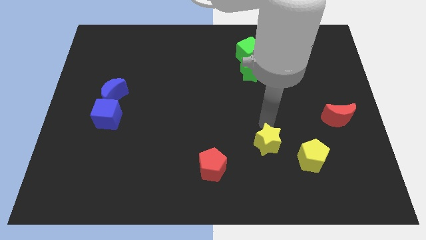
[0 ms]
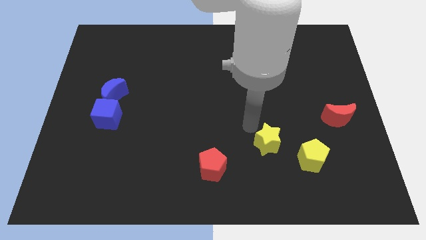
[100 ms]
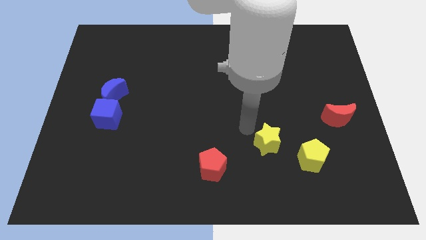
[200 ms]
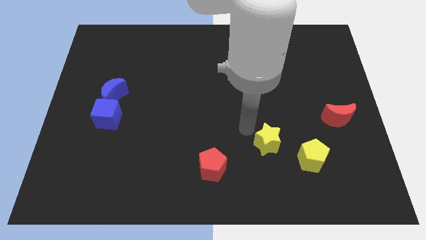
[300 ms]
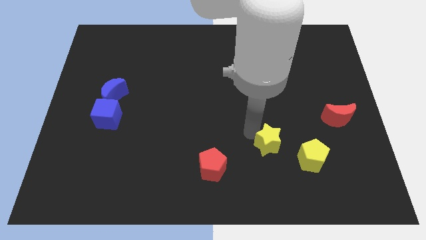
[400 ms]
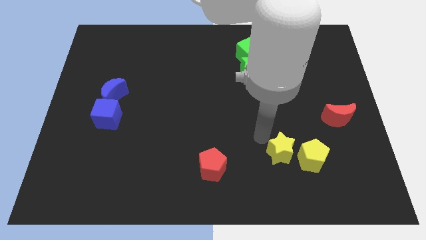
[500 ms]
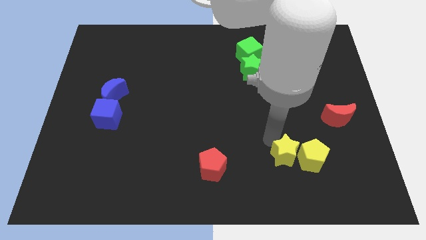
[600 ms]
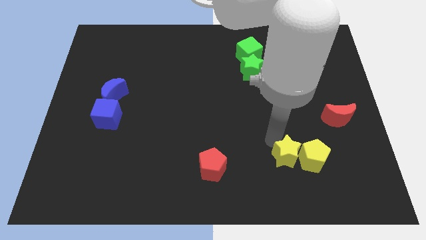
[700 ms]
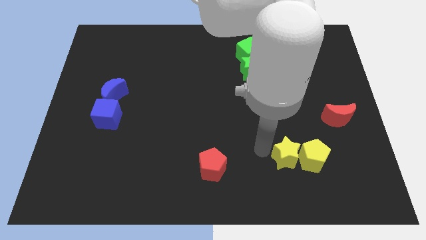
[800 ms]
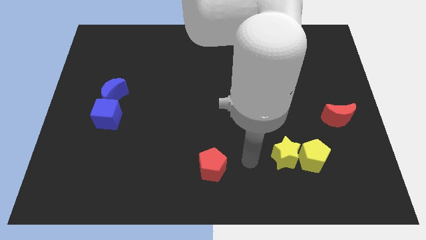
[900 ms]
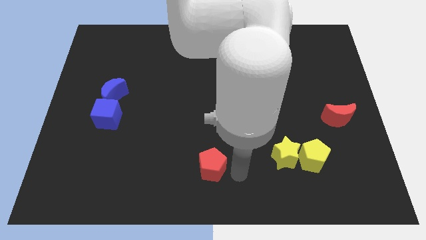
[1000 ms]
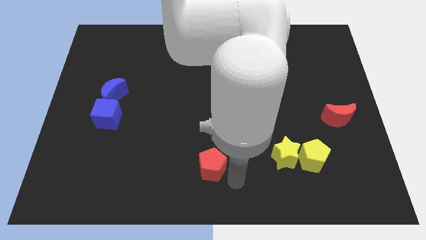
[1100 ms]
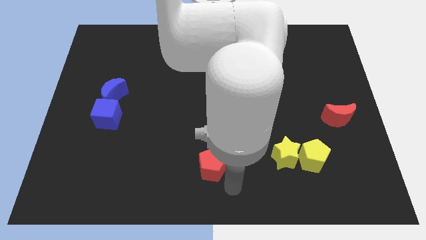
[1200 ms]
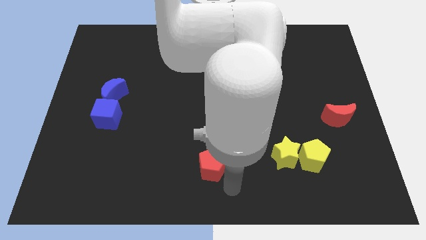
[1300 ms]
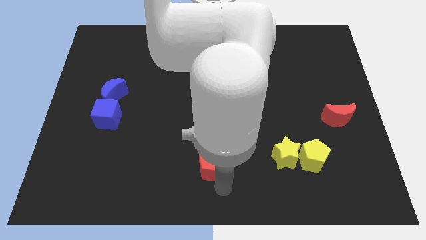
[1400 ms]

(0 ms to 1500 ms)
push the yellow star to the left side of the yellow pentagon

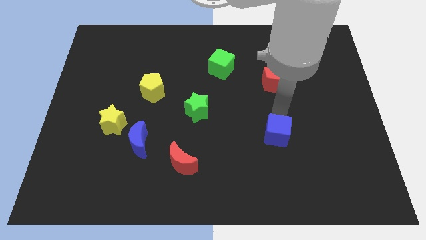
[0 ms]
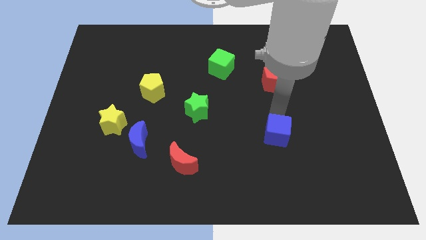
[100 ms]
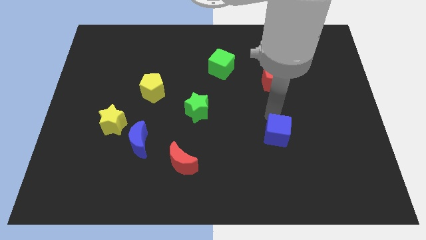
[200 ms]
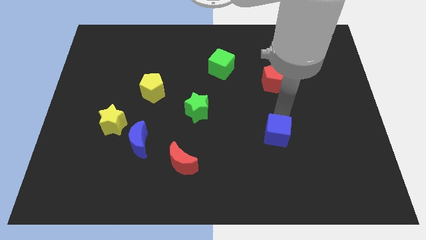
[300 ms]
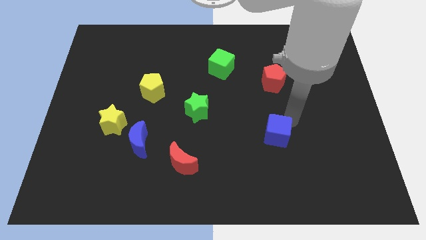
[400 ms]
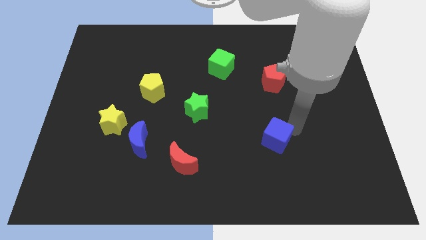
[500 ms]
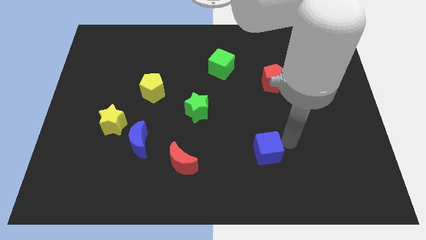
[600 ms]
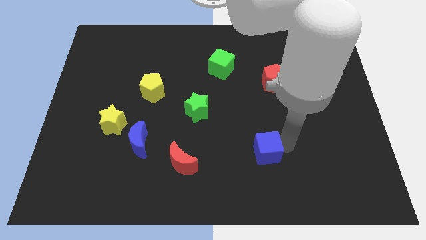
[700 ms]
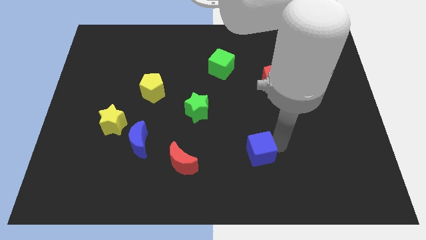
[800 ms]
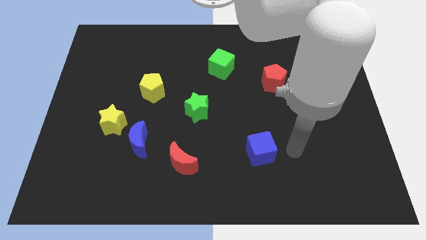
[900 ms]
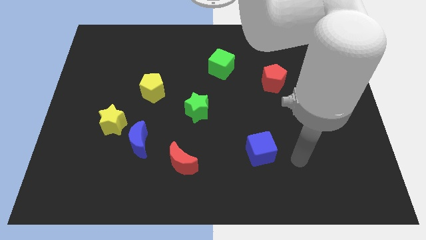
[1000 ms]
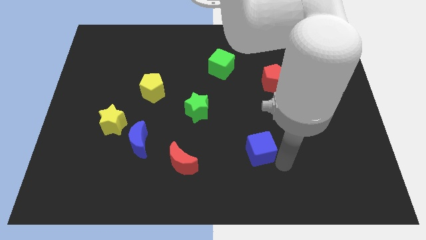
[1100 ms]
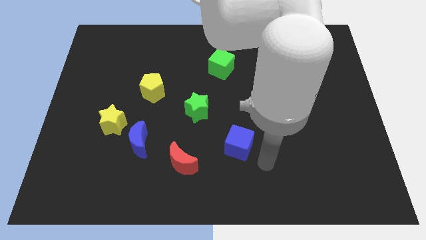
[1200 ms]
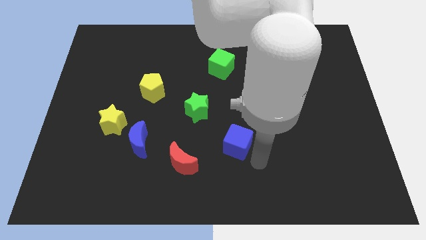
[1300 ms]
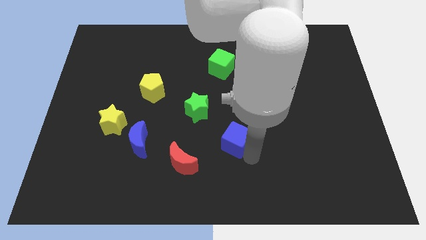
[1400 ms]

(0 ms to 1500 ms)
drag the blue cube to the top right side of the red moon

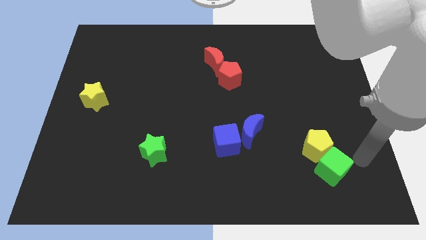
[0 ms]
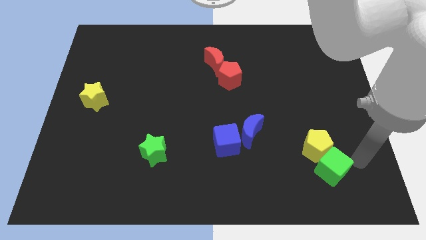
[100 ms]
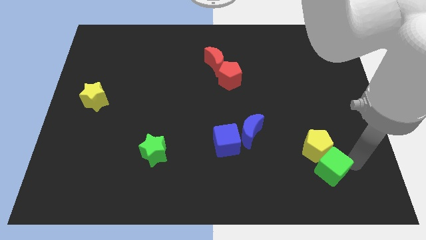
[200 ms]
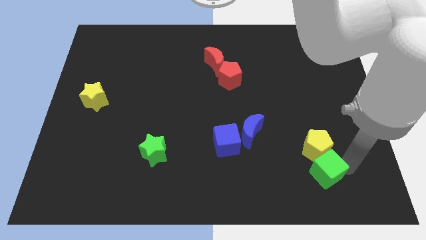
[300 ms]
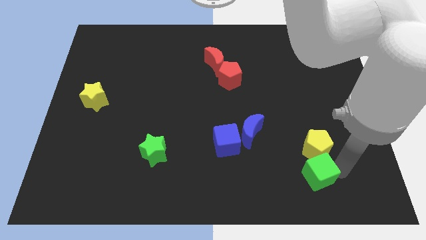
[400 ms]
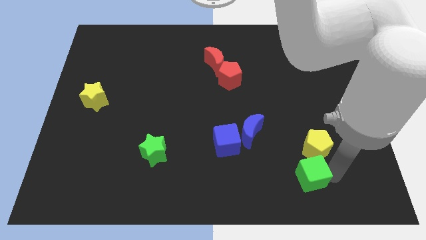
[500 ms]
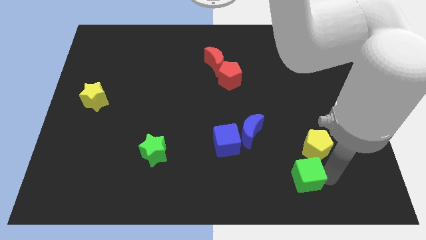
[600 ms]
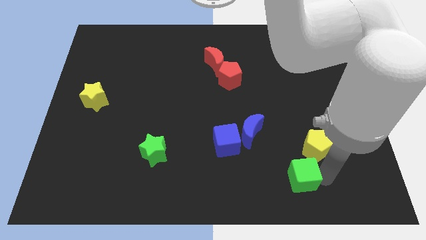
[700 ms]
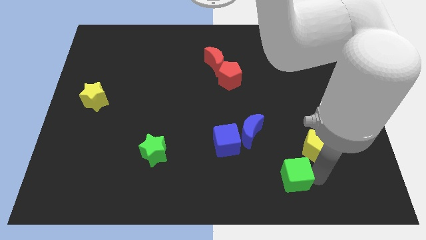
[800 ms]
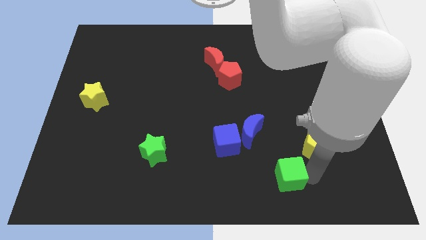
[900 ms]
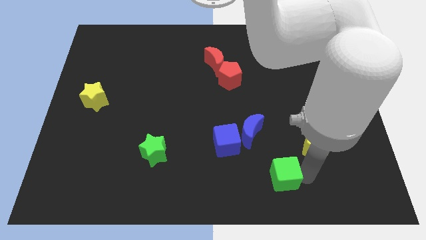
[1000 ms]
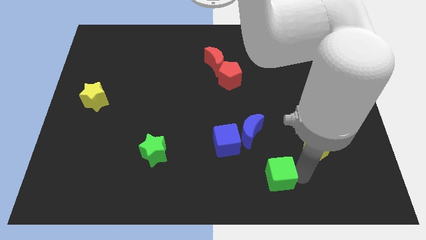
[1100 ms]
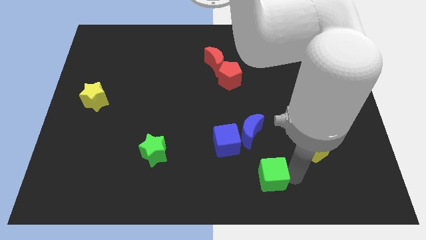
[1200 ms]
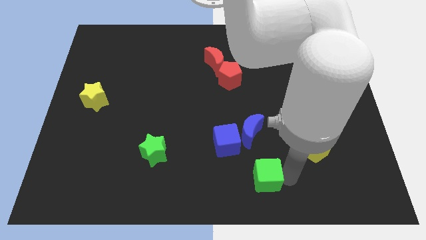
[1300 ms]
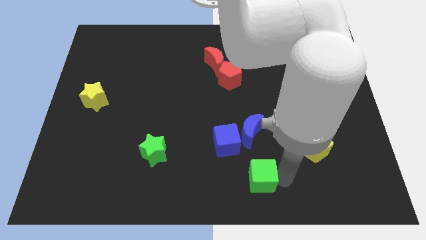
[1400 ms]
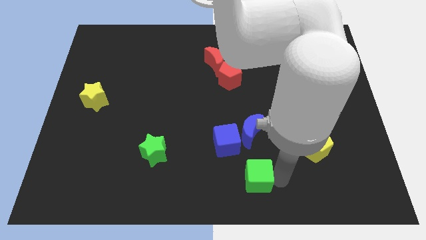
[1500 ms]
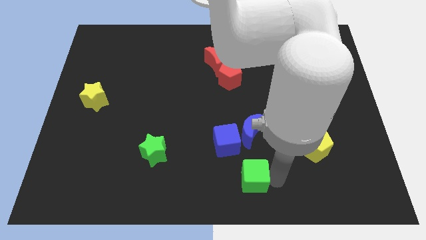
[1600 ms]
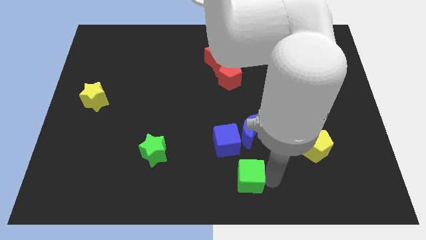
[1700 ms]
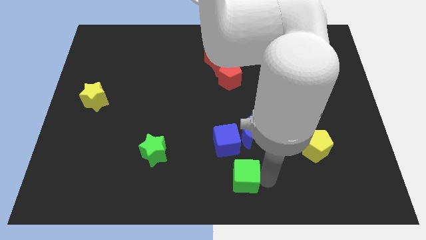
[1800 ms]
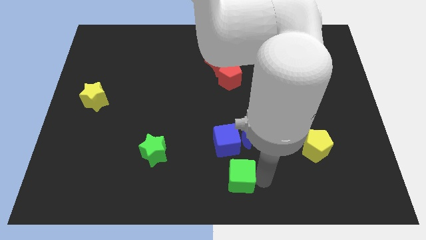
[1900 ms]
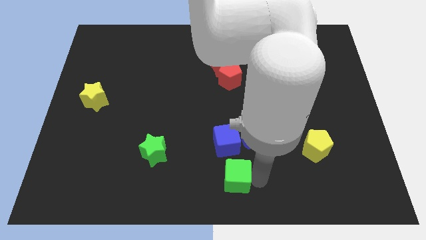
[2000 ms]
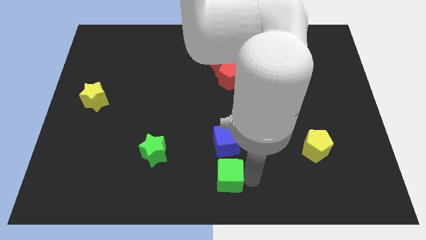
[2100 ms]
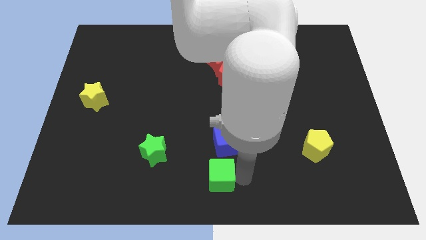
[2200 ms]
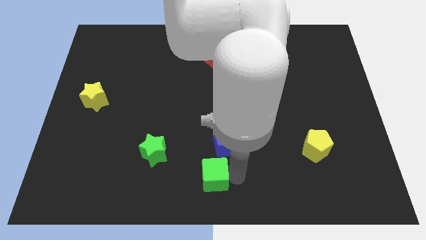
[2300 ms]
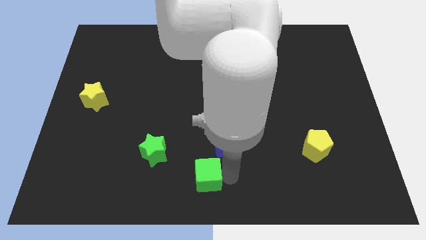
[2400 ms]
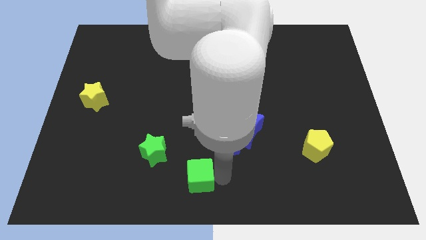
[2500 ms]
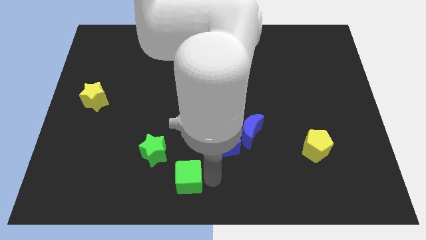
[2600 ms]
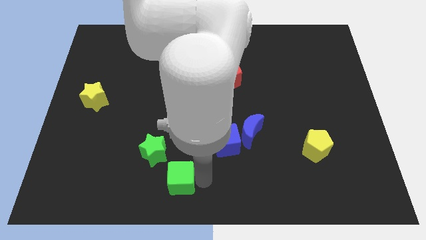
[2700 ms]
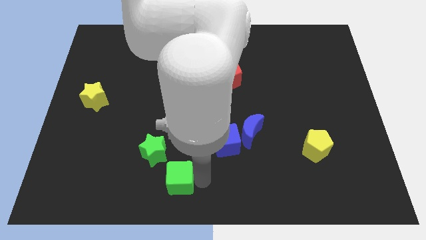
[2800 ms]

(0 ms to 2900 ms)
push the green cube diagonally to the bottom right of the green star

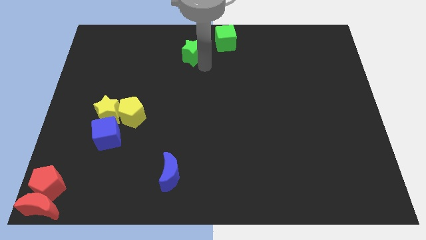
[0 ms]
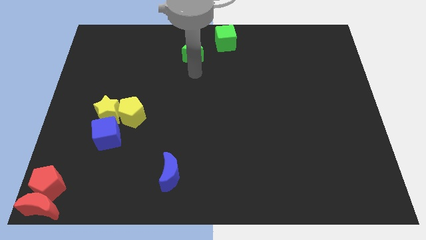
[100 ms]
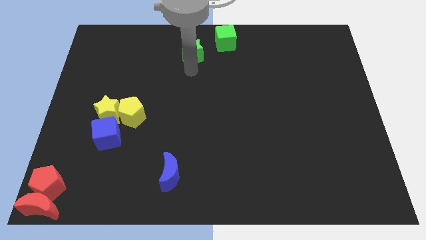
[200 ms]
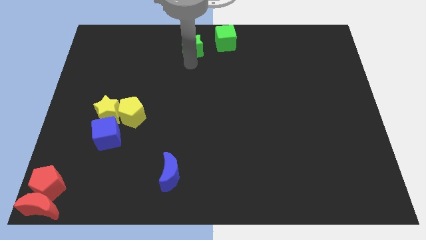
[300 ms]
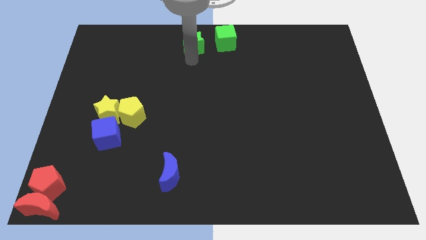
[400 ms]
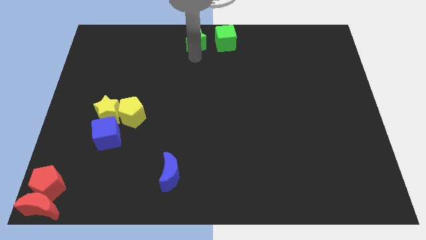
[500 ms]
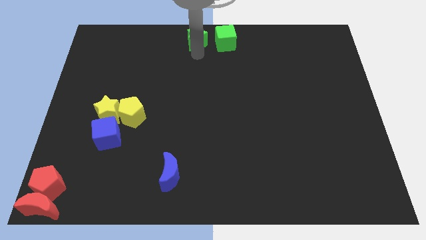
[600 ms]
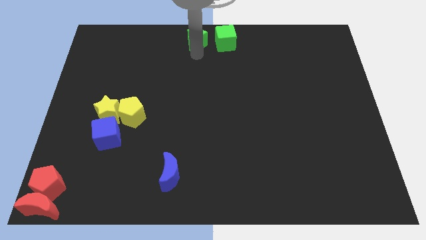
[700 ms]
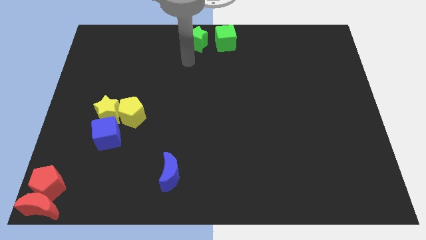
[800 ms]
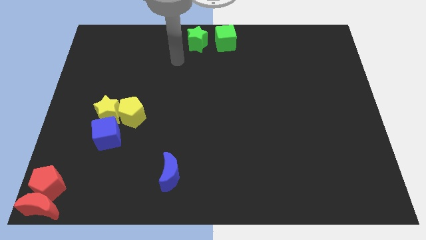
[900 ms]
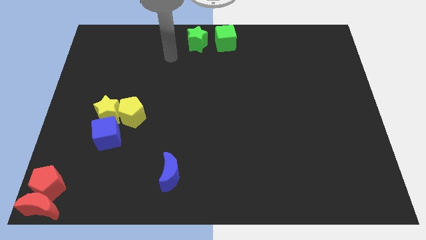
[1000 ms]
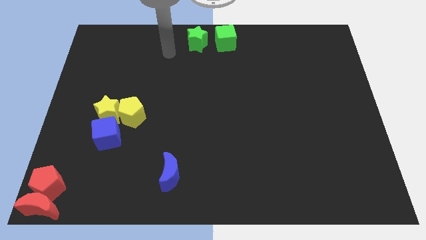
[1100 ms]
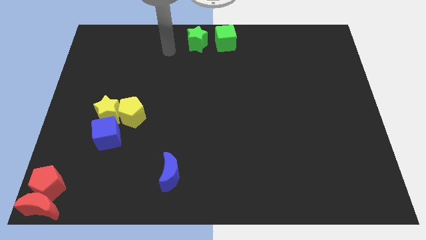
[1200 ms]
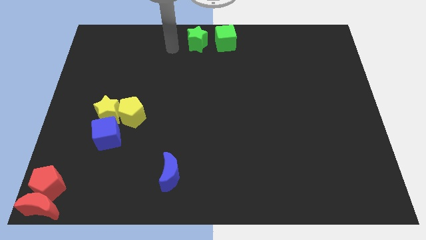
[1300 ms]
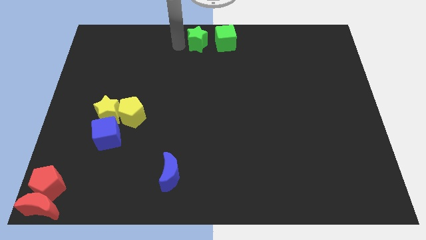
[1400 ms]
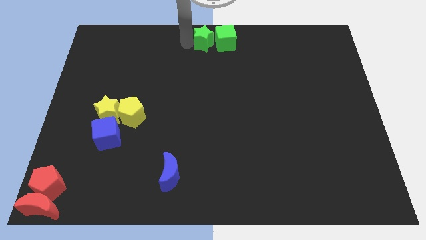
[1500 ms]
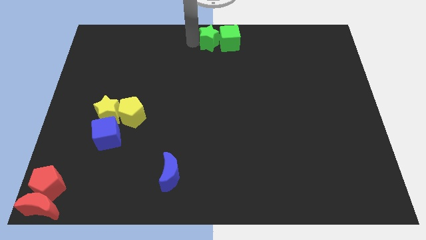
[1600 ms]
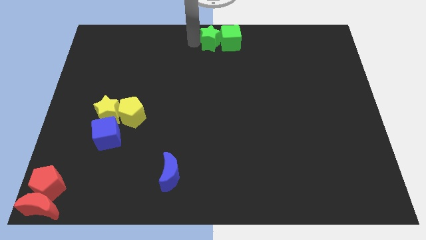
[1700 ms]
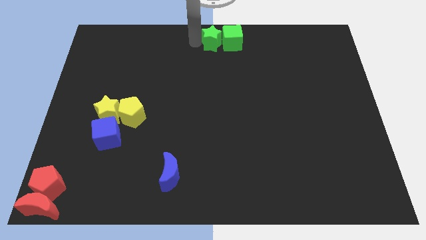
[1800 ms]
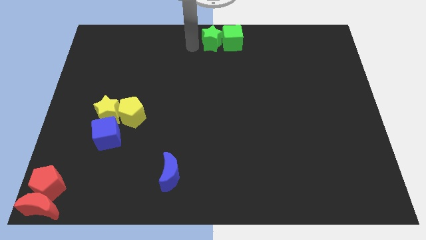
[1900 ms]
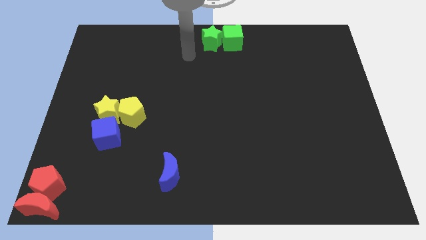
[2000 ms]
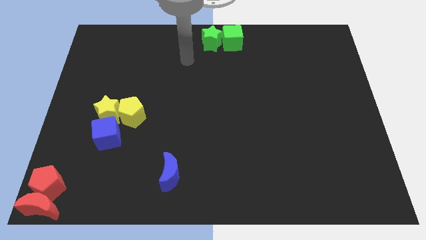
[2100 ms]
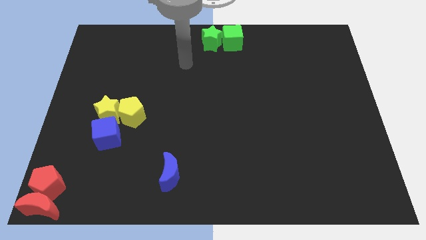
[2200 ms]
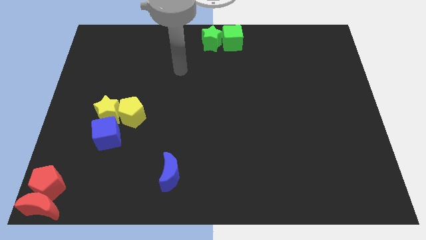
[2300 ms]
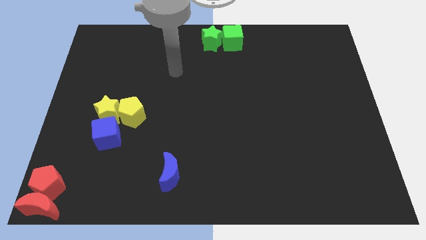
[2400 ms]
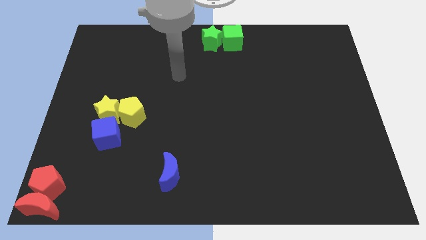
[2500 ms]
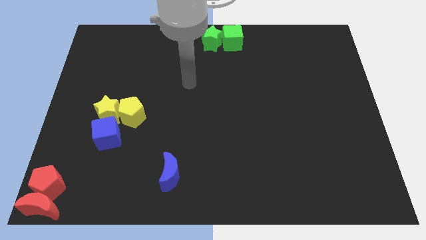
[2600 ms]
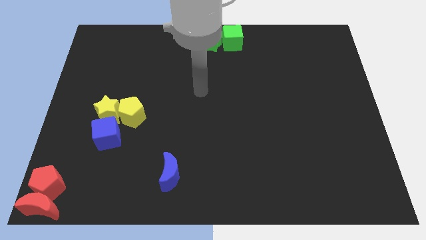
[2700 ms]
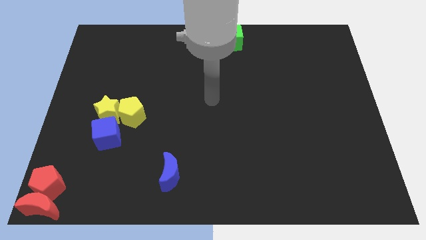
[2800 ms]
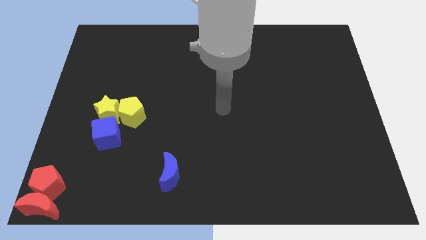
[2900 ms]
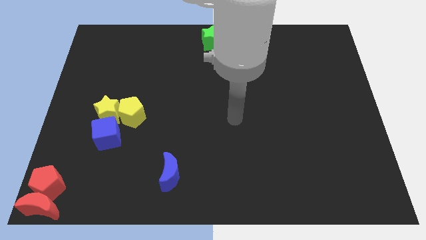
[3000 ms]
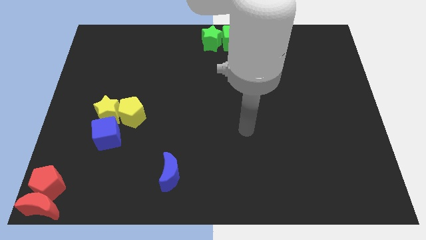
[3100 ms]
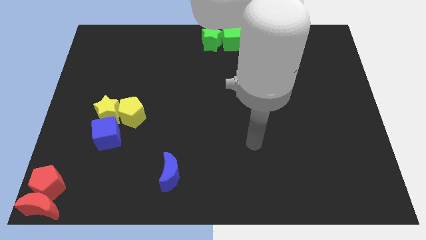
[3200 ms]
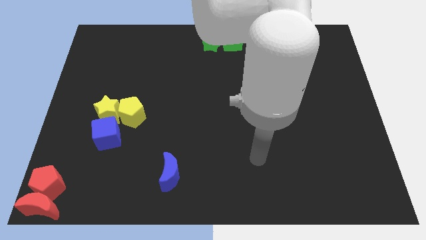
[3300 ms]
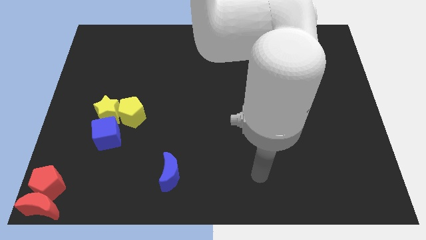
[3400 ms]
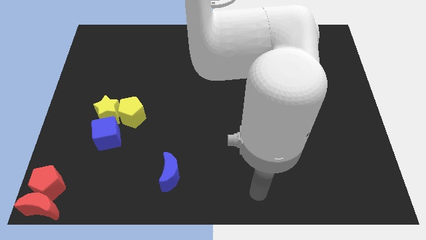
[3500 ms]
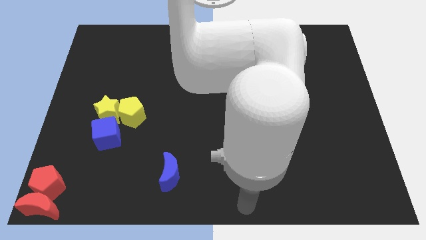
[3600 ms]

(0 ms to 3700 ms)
place the green star to the rigt of the green cube
